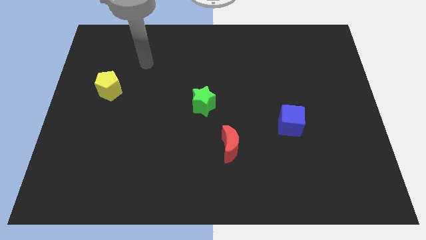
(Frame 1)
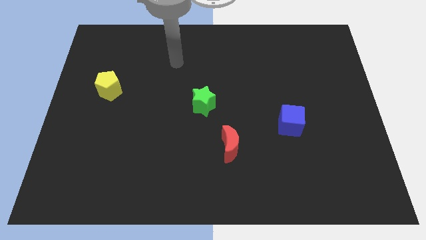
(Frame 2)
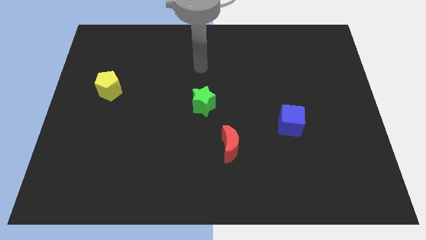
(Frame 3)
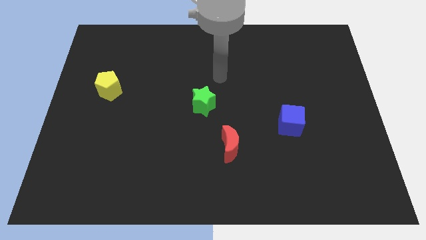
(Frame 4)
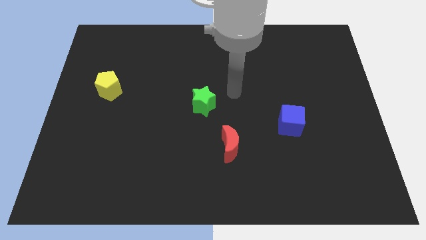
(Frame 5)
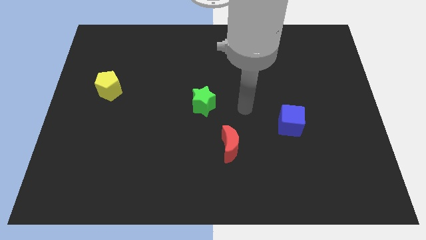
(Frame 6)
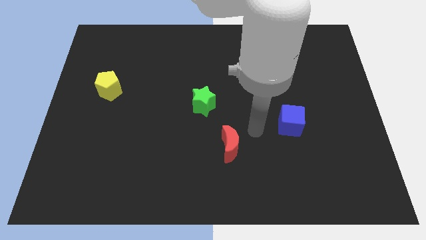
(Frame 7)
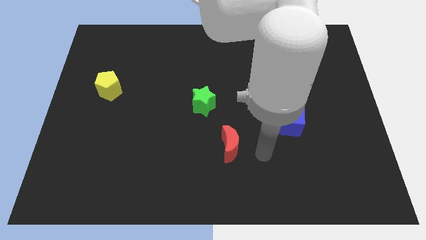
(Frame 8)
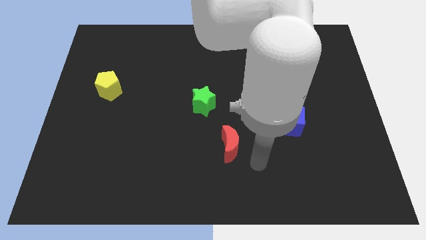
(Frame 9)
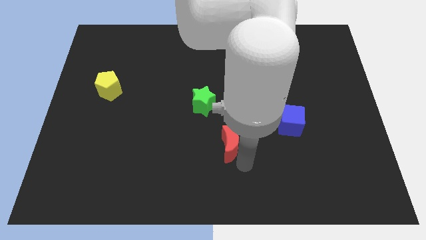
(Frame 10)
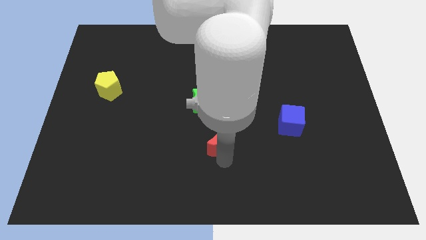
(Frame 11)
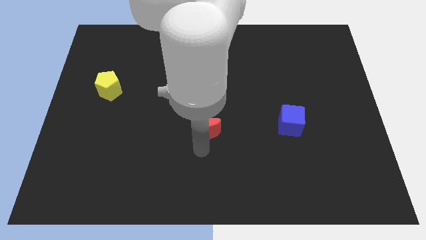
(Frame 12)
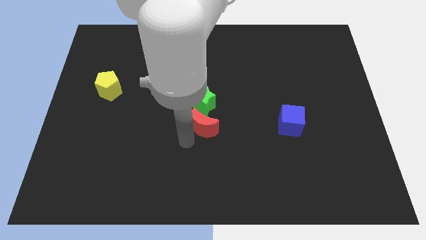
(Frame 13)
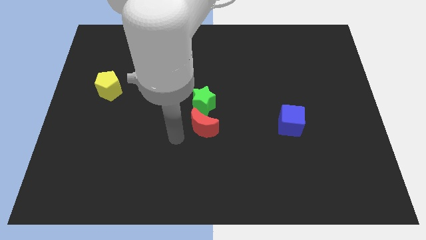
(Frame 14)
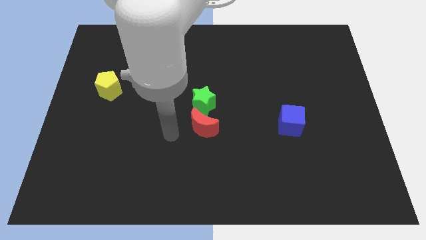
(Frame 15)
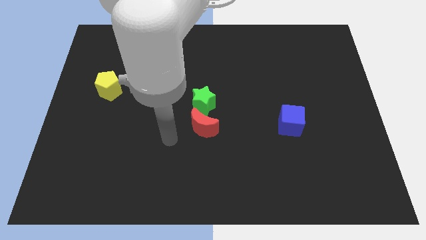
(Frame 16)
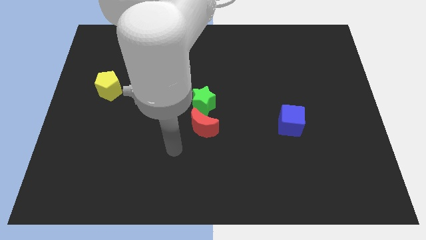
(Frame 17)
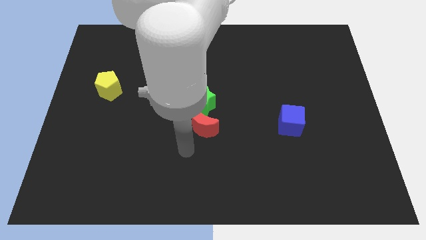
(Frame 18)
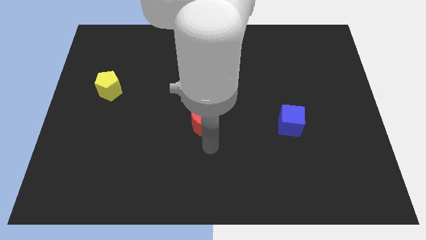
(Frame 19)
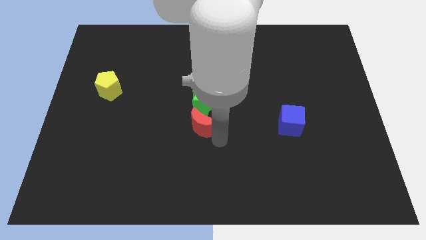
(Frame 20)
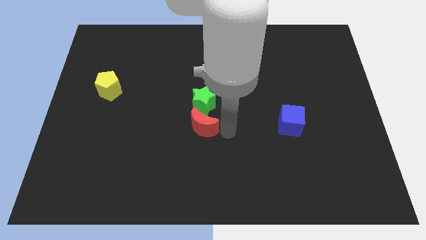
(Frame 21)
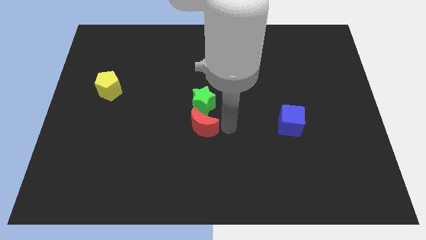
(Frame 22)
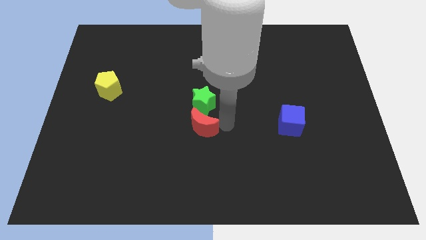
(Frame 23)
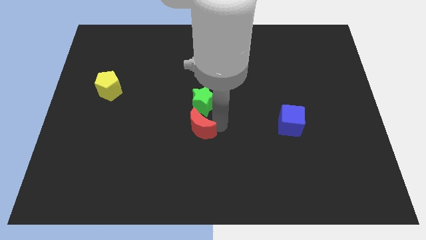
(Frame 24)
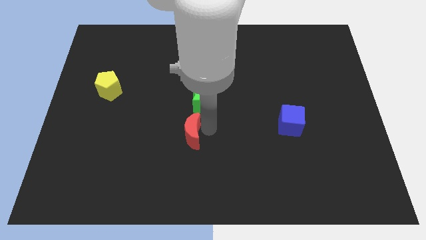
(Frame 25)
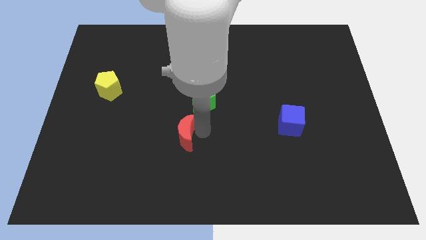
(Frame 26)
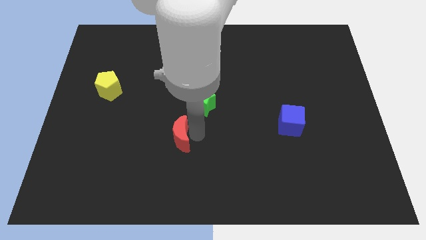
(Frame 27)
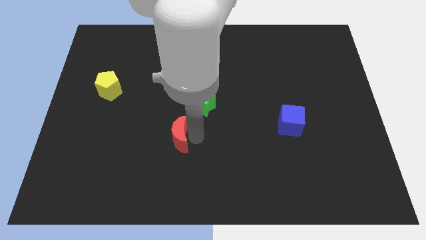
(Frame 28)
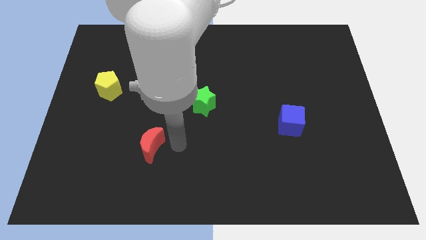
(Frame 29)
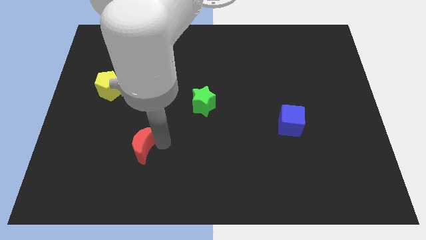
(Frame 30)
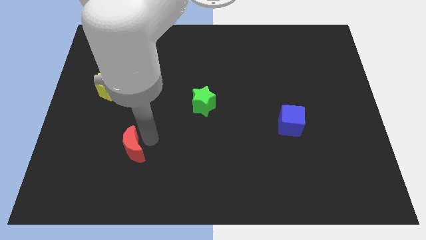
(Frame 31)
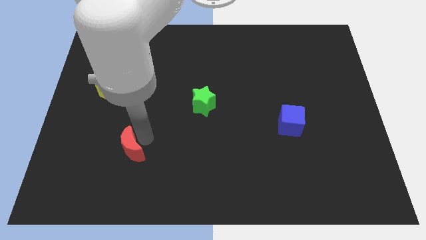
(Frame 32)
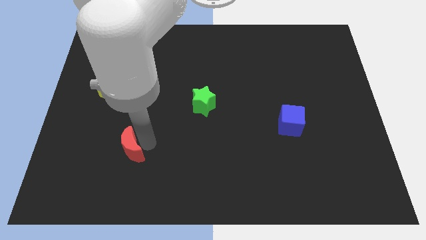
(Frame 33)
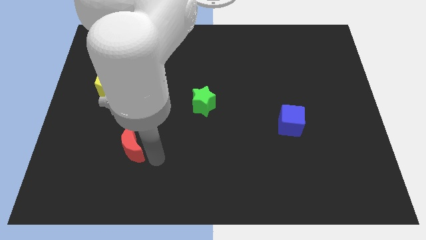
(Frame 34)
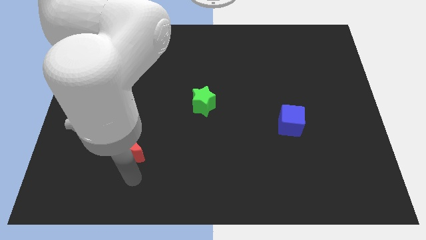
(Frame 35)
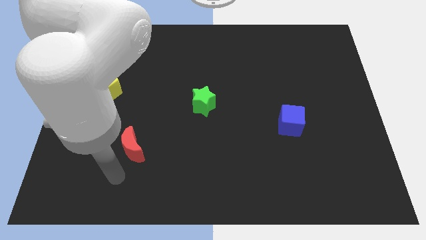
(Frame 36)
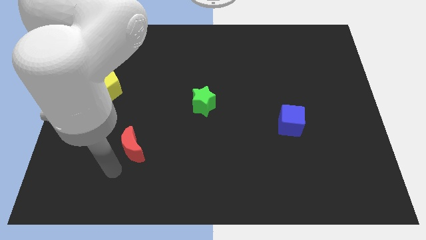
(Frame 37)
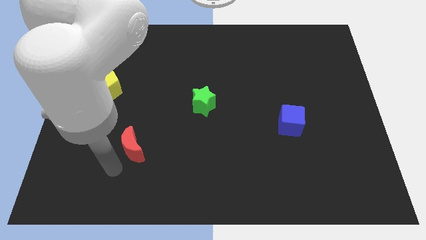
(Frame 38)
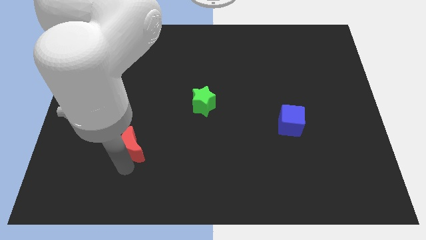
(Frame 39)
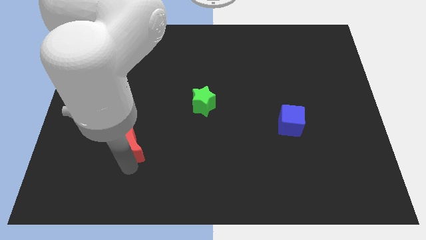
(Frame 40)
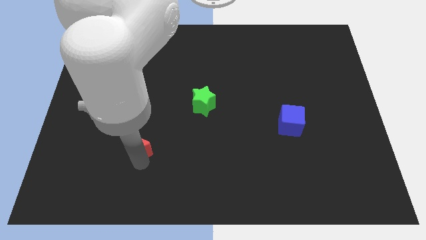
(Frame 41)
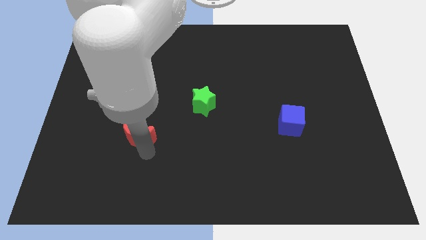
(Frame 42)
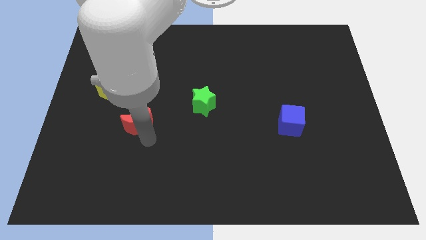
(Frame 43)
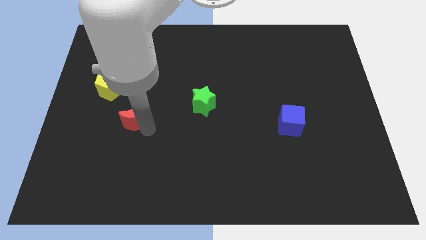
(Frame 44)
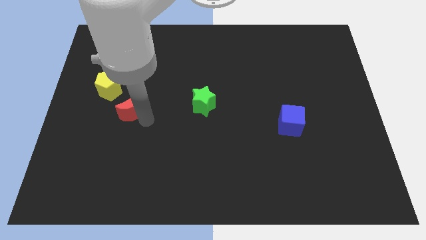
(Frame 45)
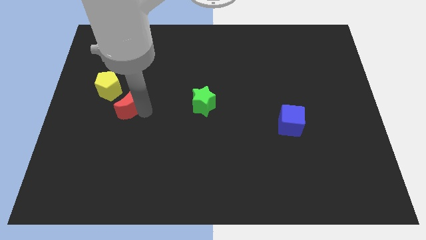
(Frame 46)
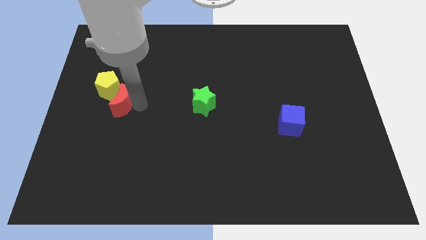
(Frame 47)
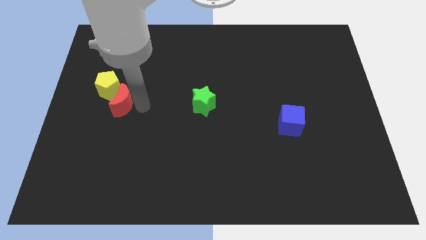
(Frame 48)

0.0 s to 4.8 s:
slide the red moon close to the yellow pentagon

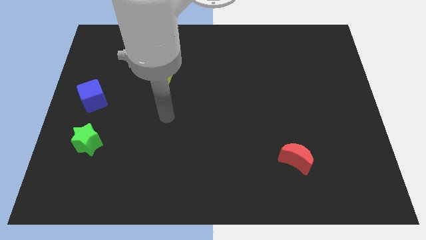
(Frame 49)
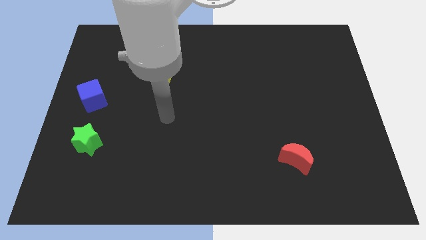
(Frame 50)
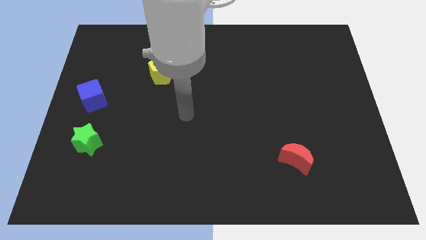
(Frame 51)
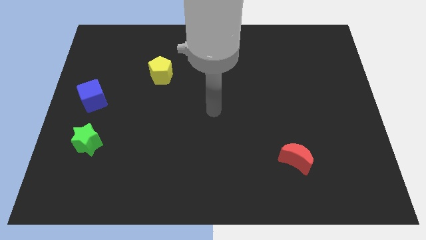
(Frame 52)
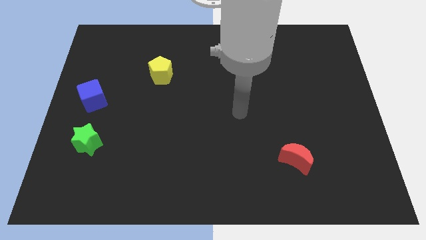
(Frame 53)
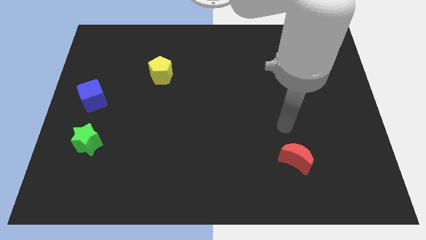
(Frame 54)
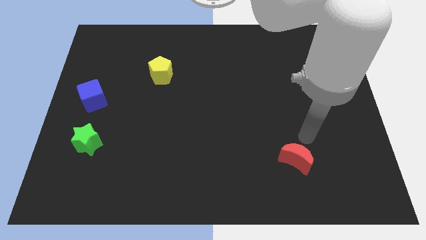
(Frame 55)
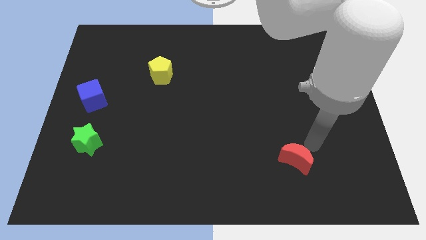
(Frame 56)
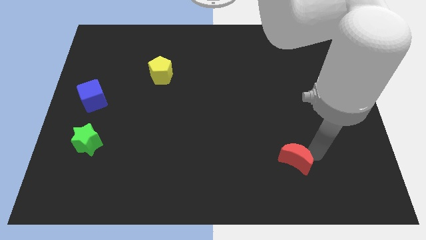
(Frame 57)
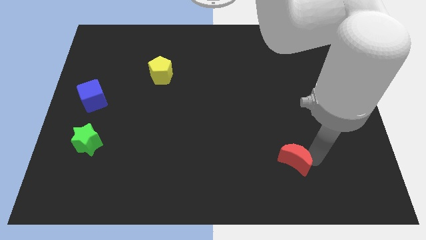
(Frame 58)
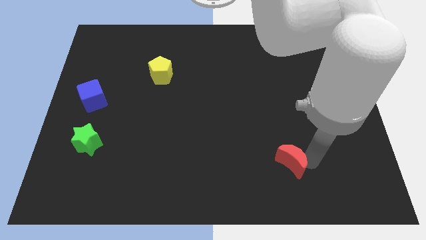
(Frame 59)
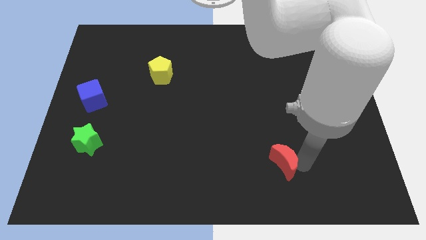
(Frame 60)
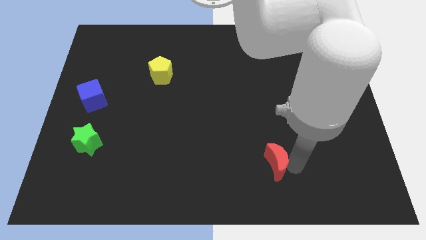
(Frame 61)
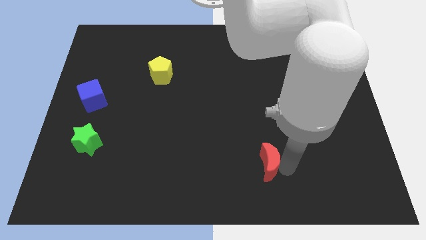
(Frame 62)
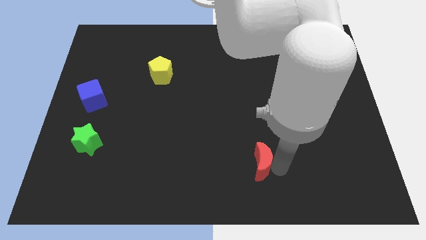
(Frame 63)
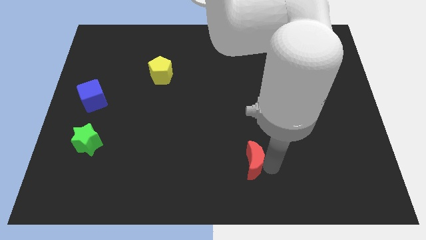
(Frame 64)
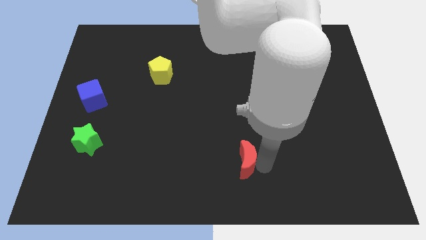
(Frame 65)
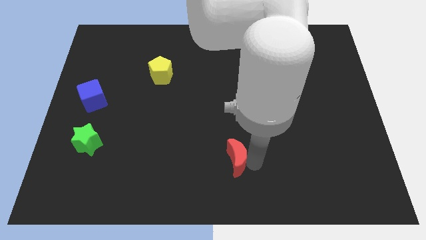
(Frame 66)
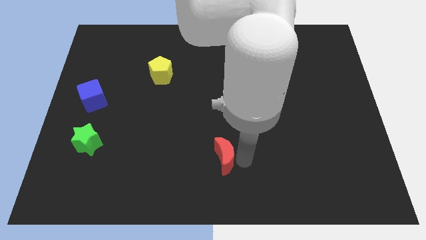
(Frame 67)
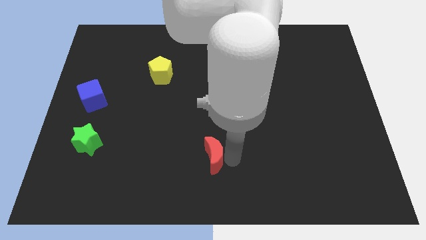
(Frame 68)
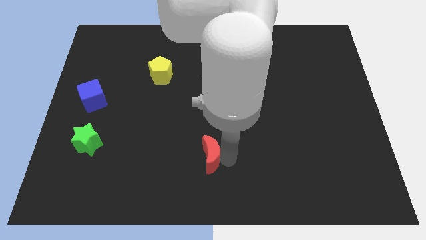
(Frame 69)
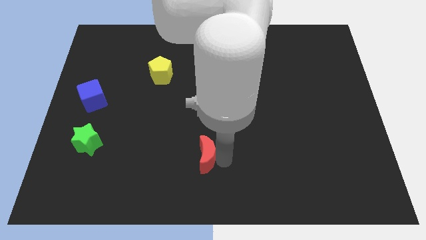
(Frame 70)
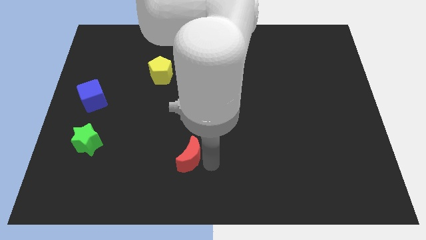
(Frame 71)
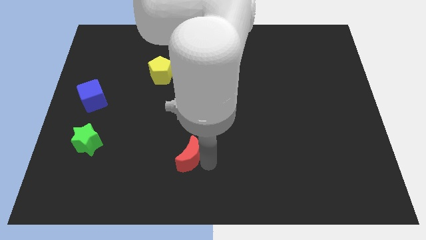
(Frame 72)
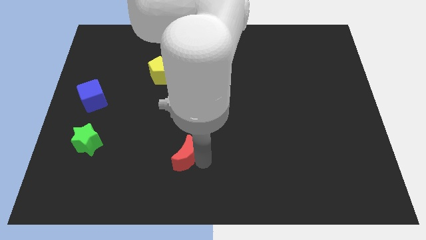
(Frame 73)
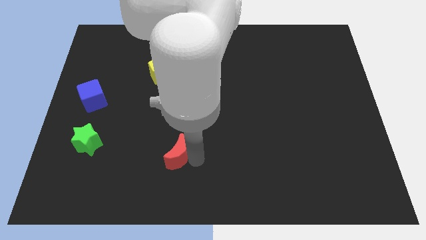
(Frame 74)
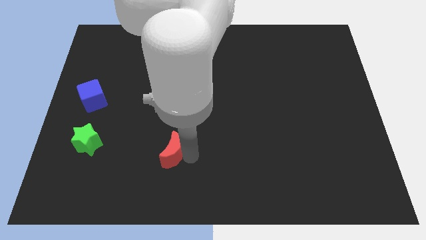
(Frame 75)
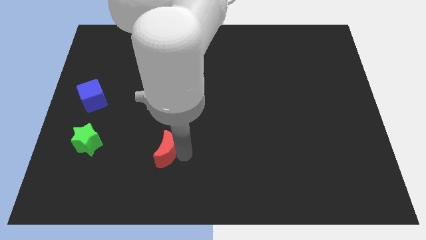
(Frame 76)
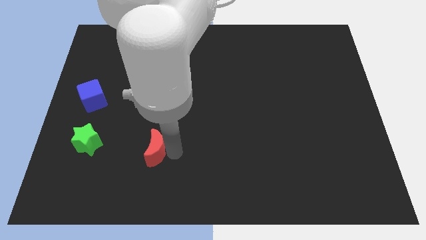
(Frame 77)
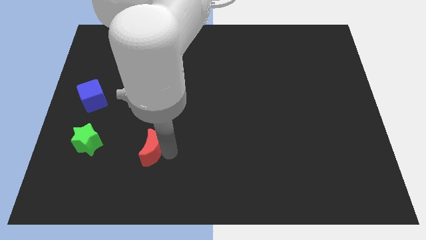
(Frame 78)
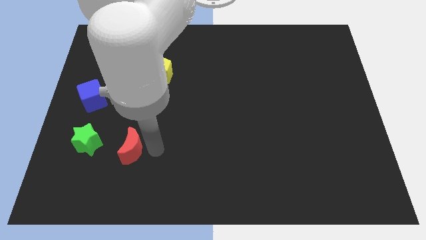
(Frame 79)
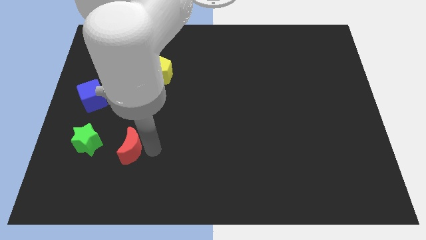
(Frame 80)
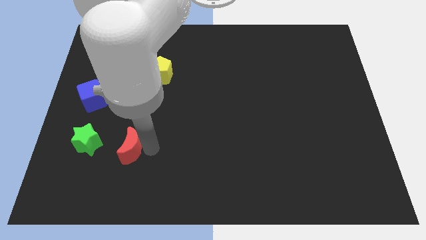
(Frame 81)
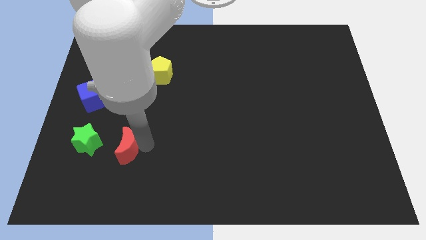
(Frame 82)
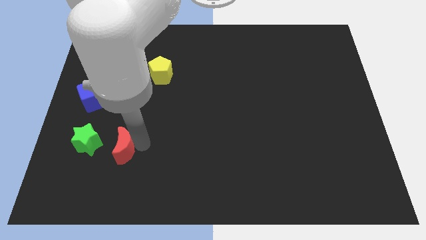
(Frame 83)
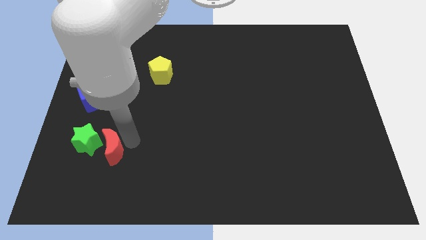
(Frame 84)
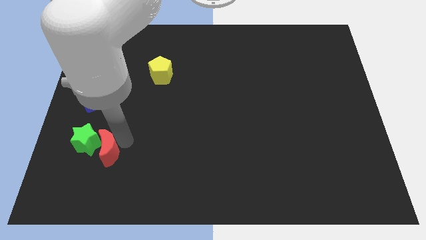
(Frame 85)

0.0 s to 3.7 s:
put the red block next to the green block
